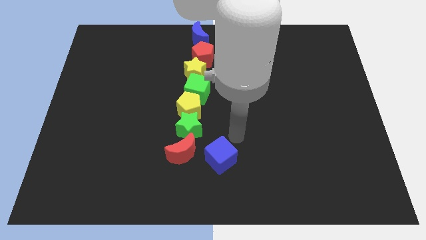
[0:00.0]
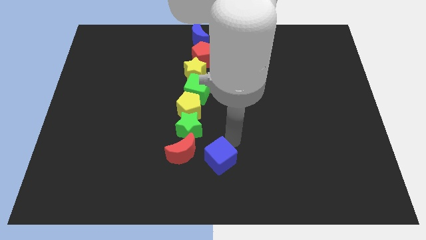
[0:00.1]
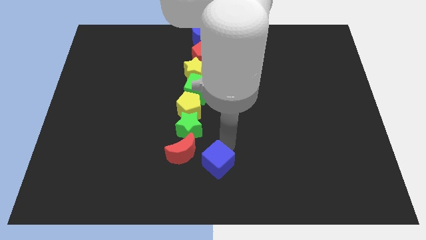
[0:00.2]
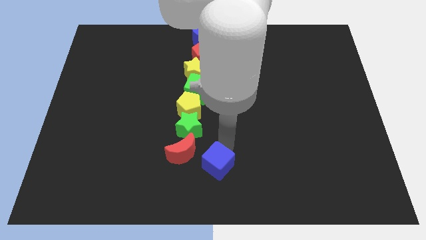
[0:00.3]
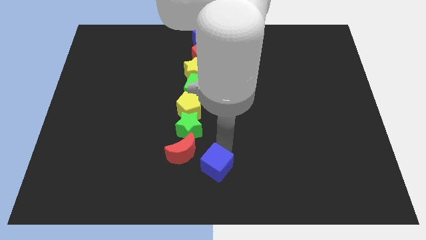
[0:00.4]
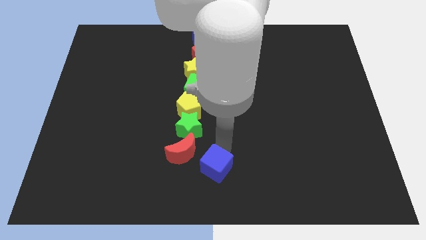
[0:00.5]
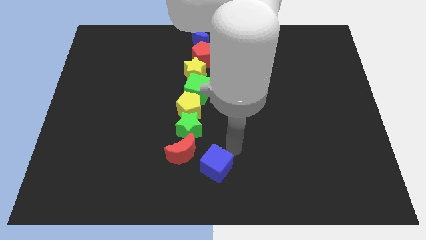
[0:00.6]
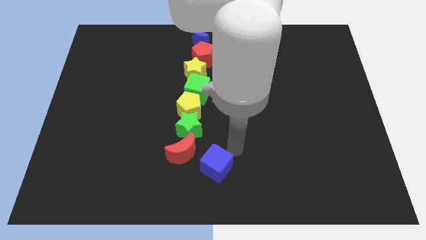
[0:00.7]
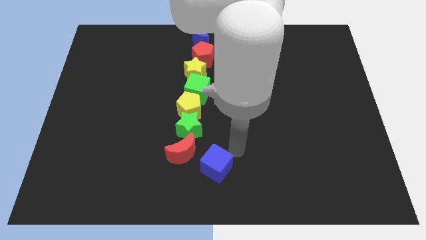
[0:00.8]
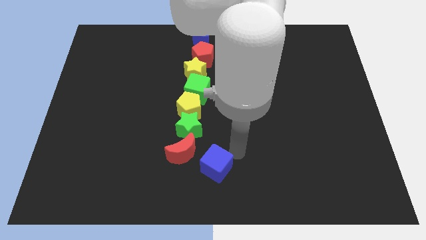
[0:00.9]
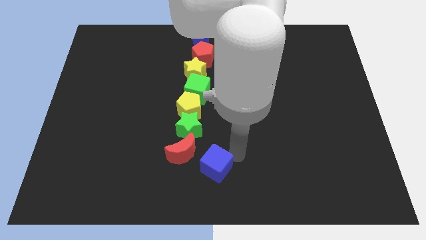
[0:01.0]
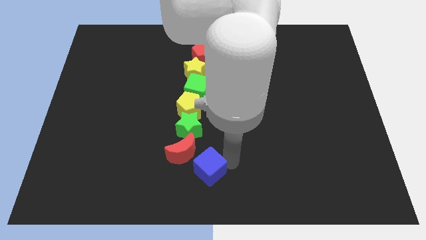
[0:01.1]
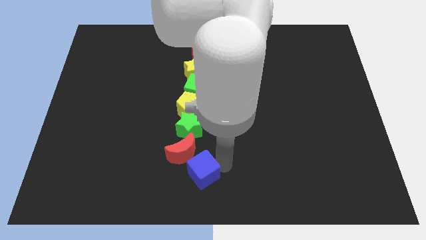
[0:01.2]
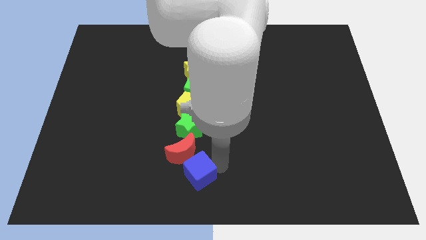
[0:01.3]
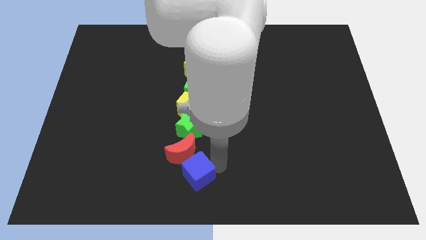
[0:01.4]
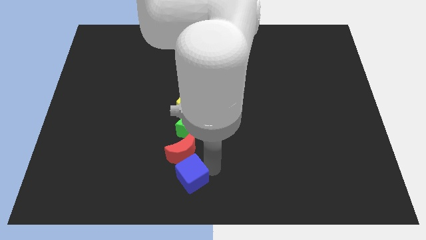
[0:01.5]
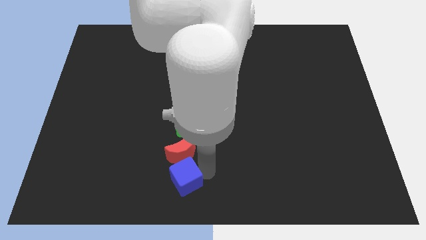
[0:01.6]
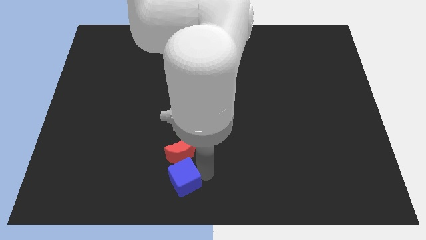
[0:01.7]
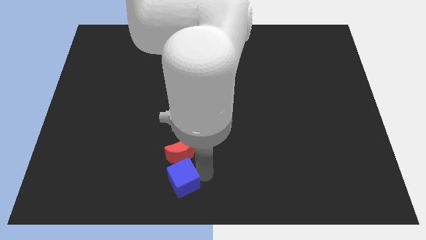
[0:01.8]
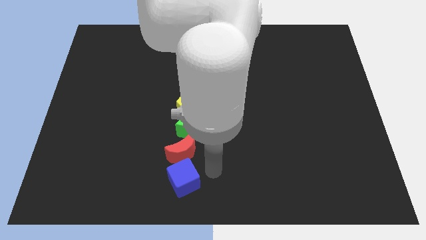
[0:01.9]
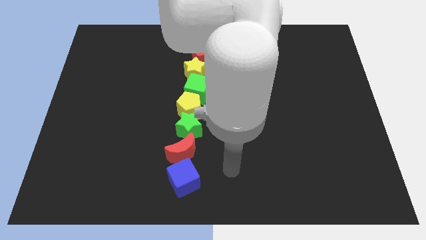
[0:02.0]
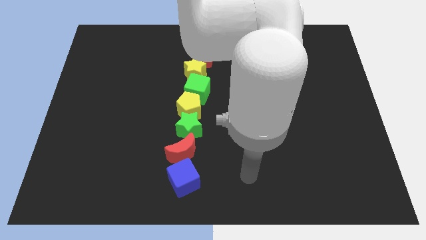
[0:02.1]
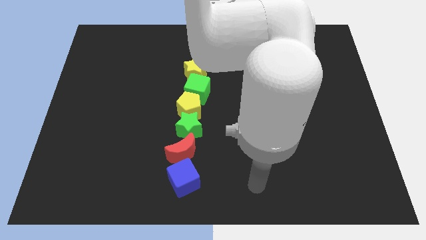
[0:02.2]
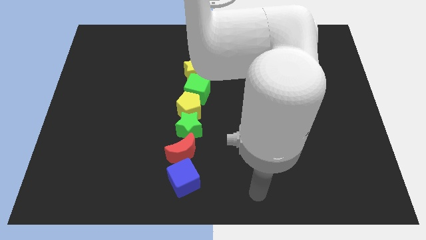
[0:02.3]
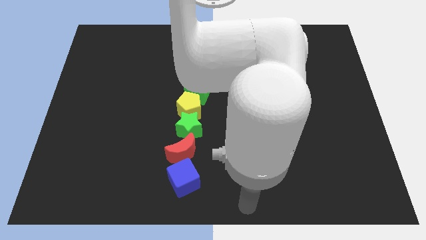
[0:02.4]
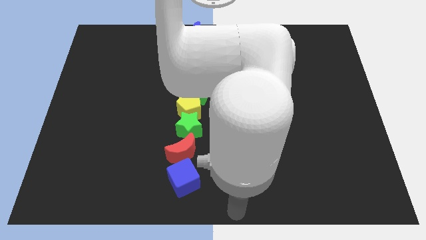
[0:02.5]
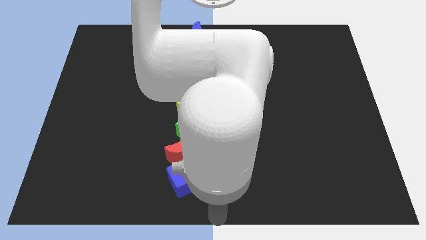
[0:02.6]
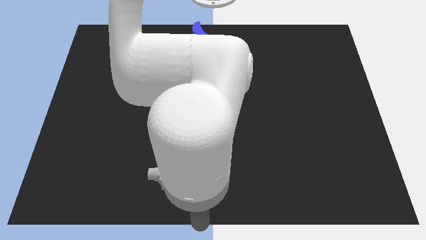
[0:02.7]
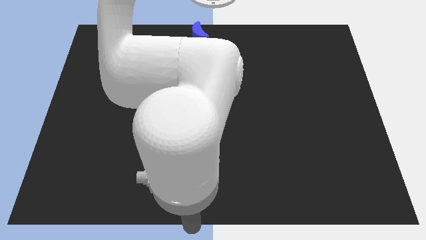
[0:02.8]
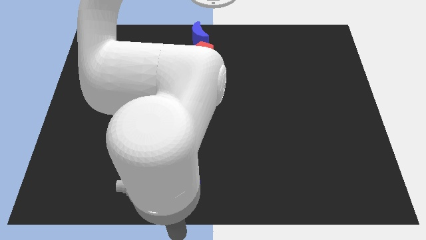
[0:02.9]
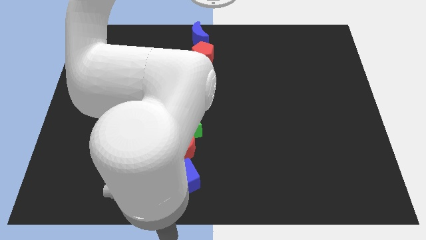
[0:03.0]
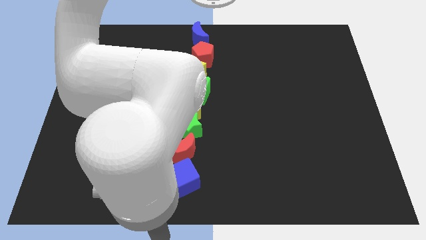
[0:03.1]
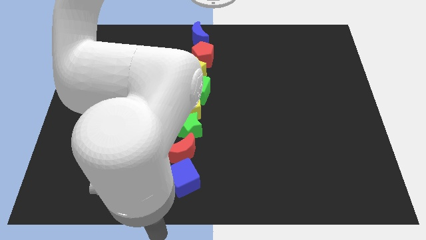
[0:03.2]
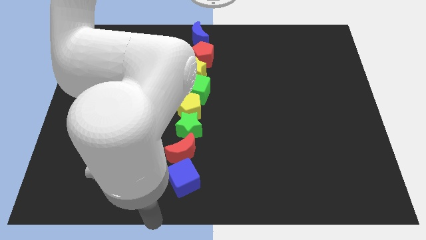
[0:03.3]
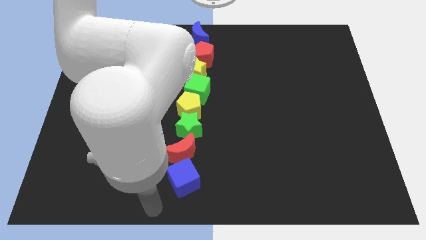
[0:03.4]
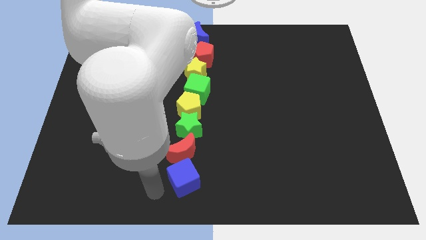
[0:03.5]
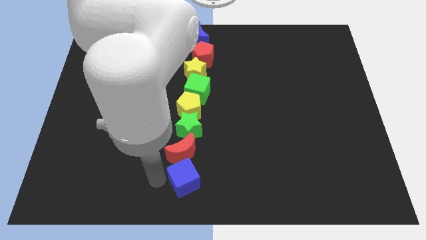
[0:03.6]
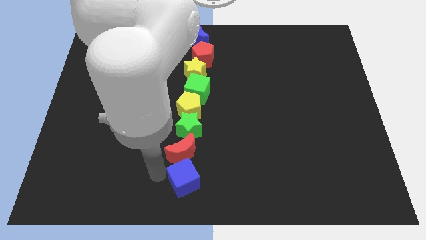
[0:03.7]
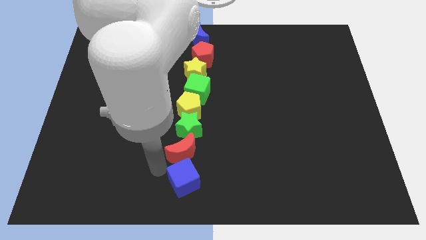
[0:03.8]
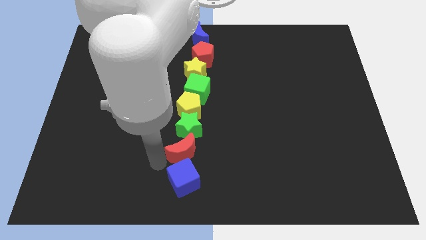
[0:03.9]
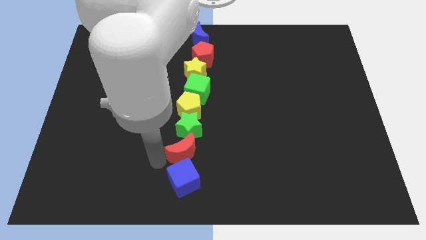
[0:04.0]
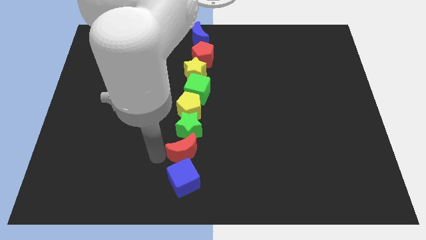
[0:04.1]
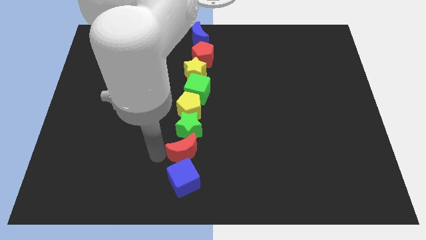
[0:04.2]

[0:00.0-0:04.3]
move the blue crescent below the red crescent

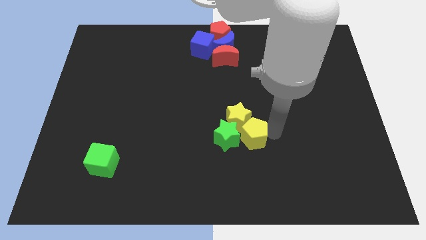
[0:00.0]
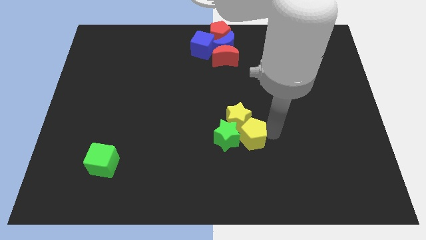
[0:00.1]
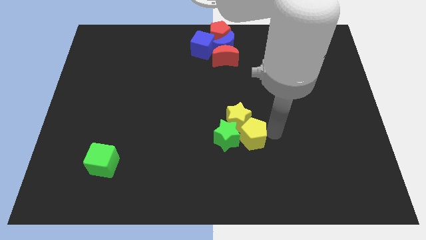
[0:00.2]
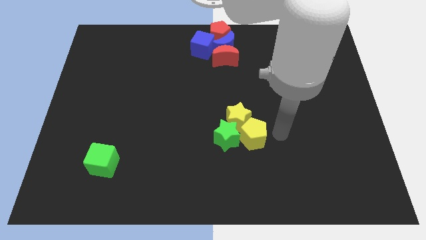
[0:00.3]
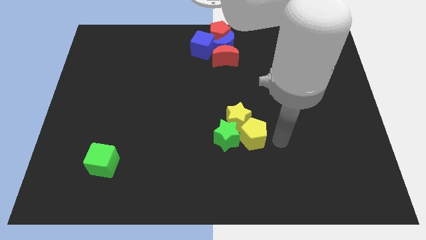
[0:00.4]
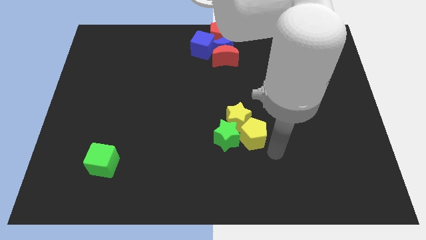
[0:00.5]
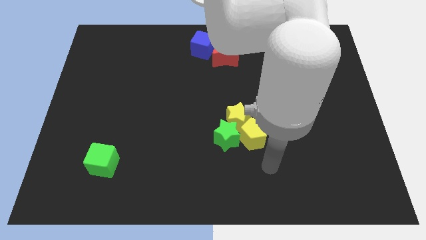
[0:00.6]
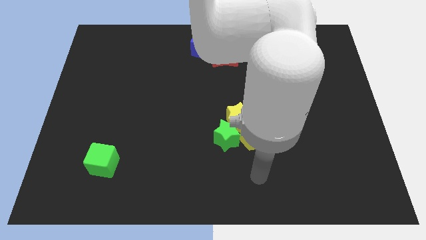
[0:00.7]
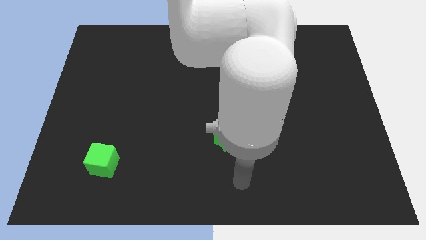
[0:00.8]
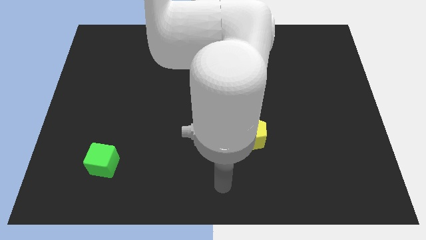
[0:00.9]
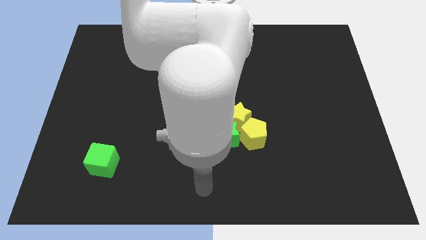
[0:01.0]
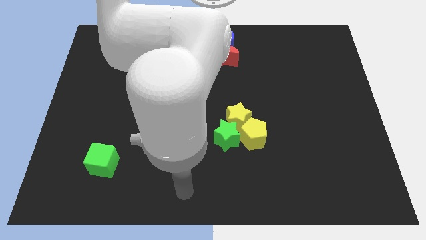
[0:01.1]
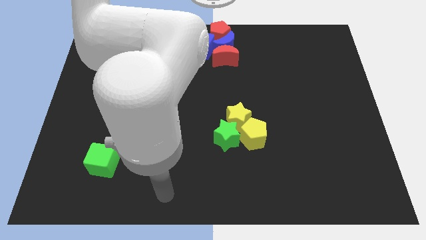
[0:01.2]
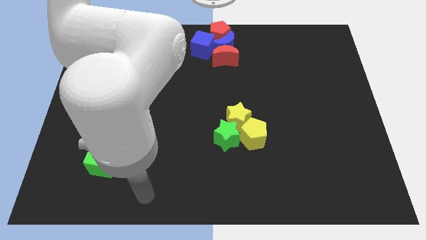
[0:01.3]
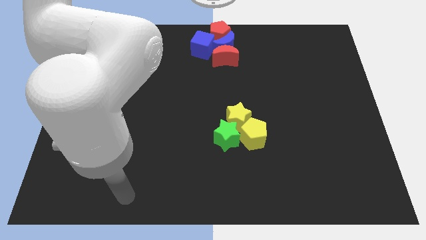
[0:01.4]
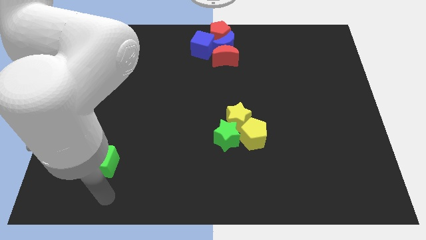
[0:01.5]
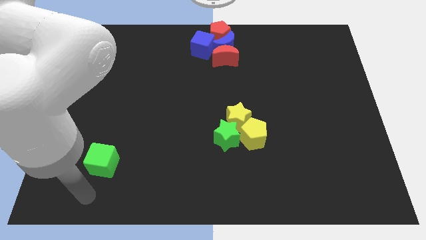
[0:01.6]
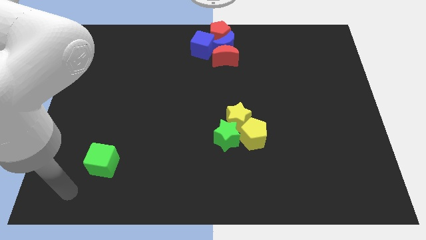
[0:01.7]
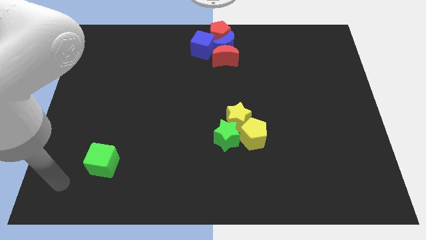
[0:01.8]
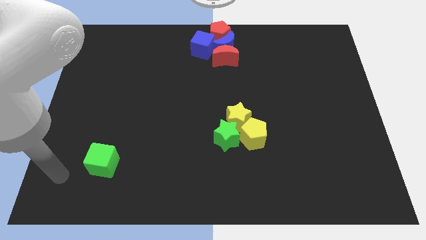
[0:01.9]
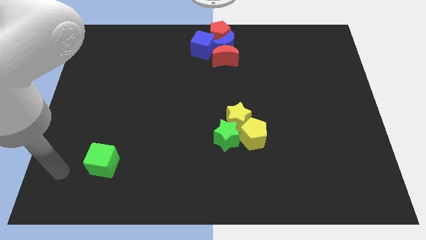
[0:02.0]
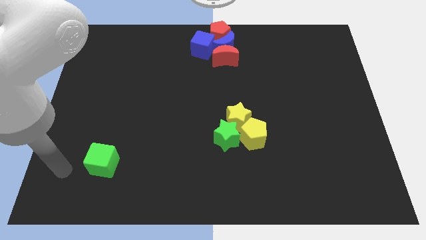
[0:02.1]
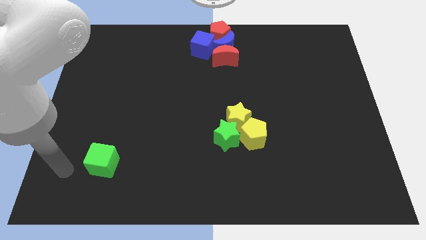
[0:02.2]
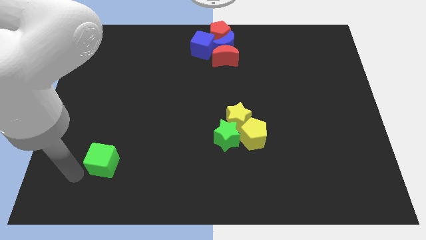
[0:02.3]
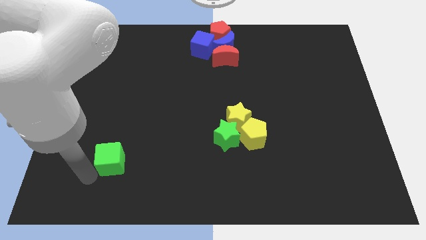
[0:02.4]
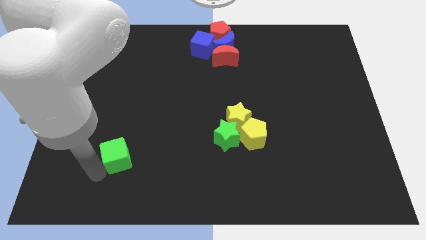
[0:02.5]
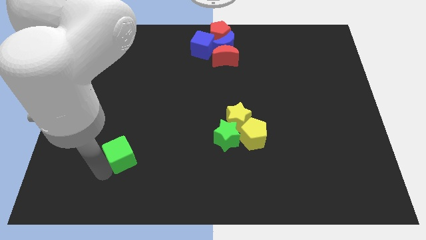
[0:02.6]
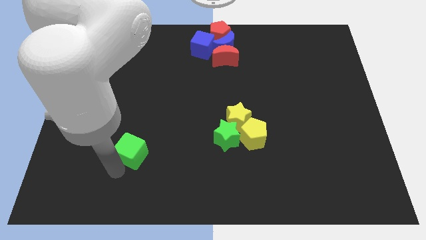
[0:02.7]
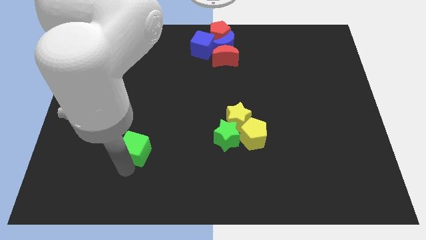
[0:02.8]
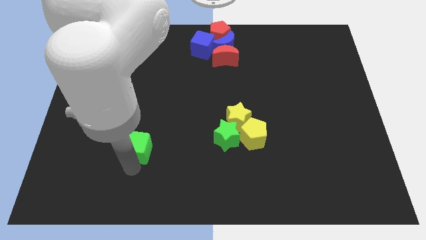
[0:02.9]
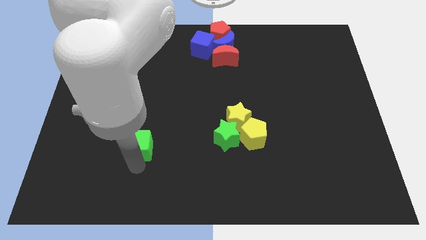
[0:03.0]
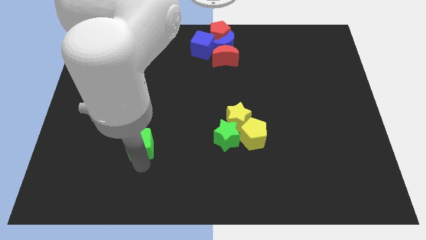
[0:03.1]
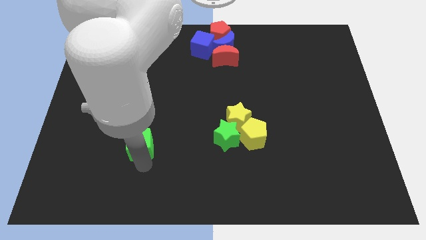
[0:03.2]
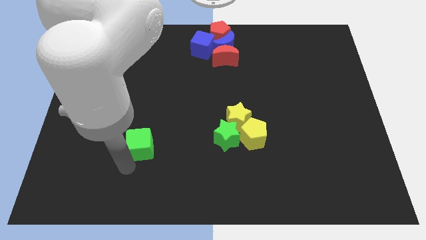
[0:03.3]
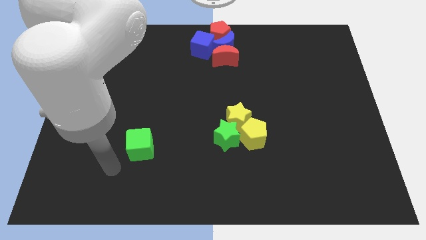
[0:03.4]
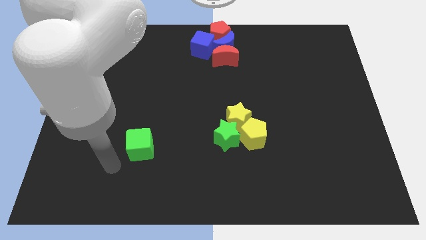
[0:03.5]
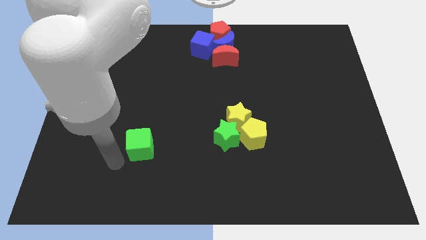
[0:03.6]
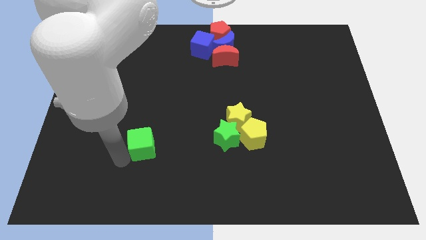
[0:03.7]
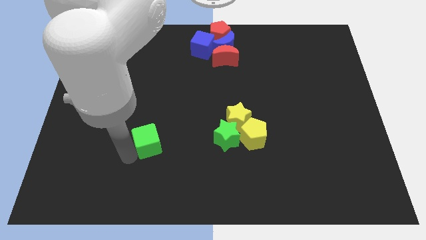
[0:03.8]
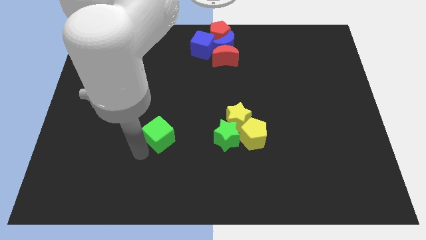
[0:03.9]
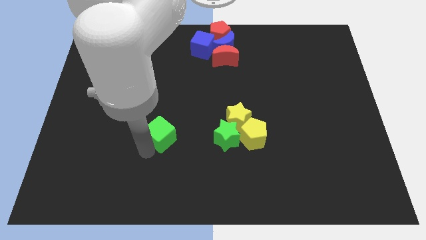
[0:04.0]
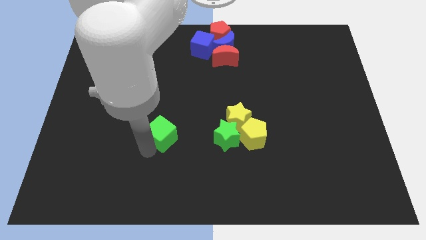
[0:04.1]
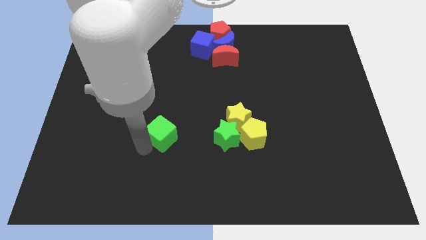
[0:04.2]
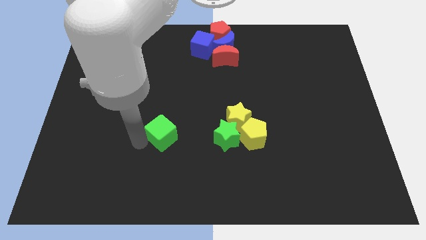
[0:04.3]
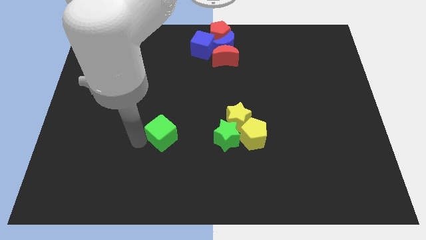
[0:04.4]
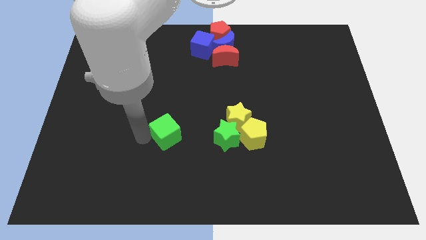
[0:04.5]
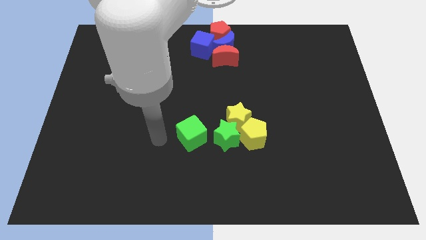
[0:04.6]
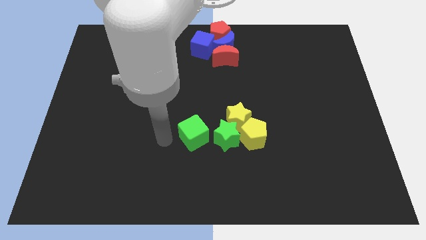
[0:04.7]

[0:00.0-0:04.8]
drag the green cube close to the green star
